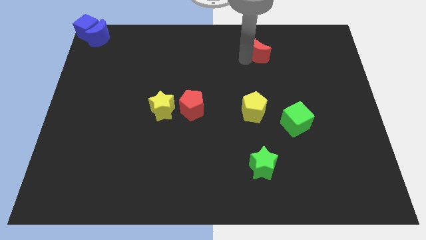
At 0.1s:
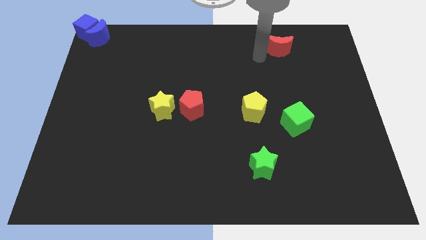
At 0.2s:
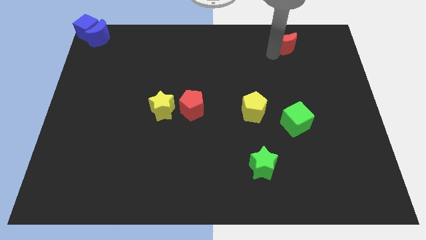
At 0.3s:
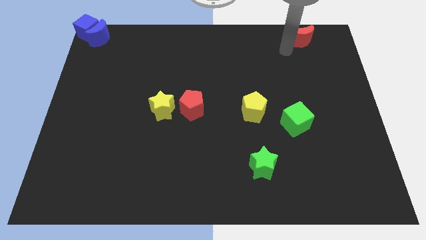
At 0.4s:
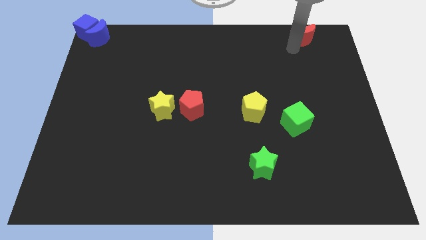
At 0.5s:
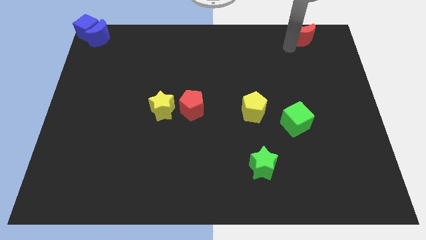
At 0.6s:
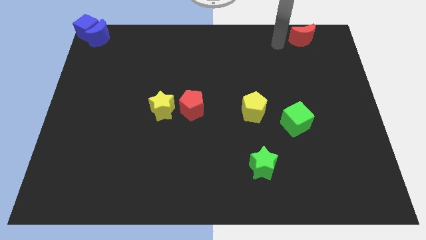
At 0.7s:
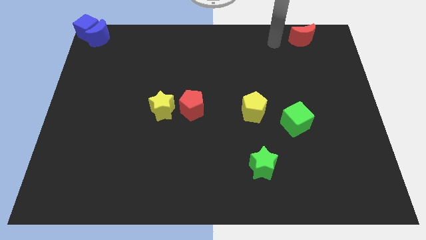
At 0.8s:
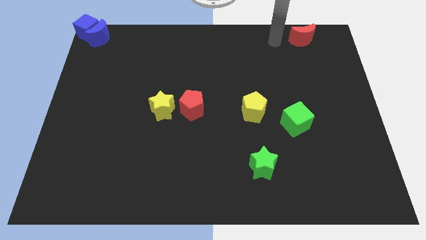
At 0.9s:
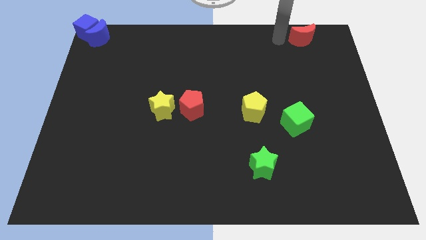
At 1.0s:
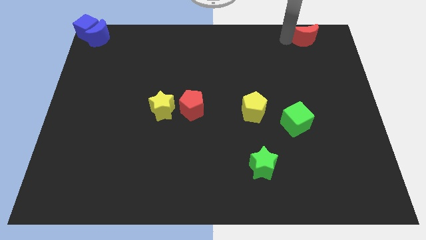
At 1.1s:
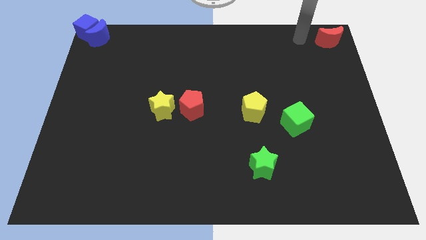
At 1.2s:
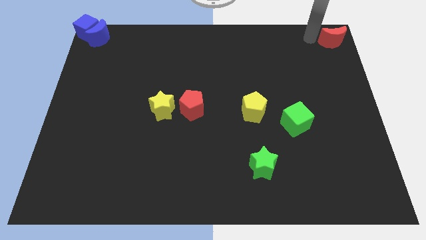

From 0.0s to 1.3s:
arrange the red crescent at the top right of the board

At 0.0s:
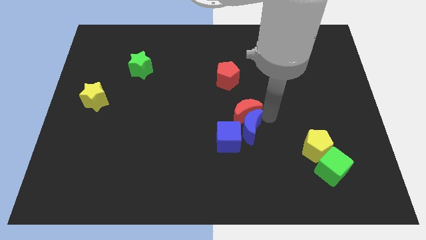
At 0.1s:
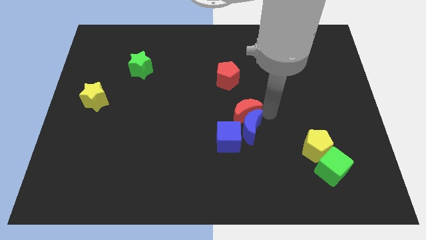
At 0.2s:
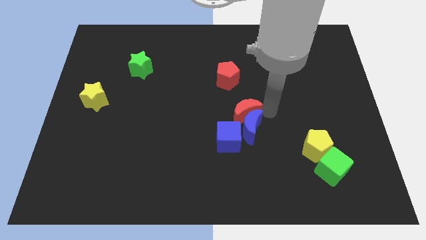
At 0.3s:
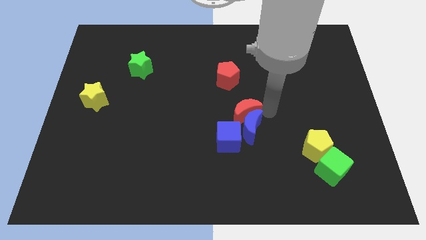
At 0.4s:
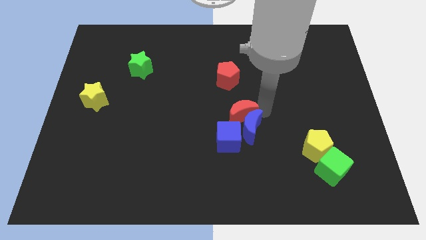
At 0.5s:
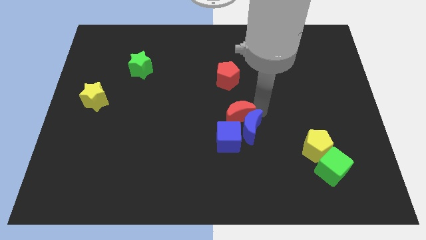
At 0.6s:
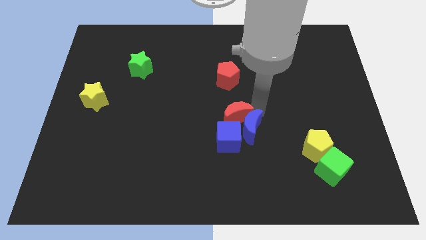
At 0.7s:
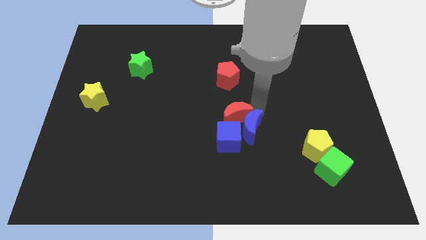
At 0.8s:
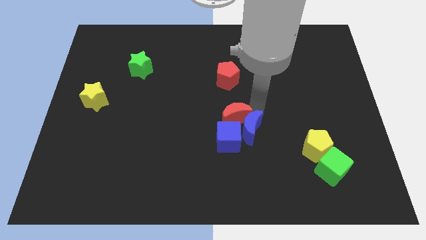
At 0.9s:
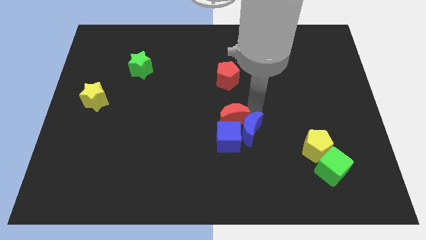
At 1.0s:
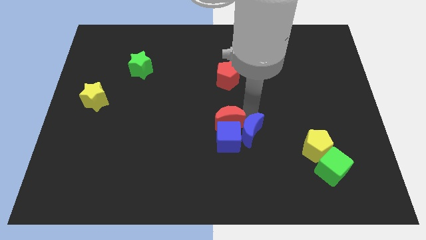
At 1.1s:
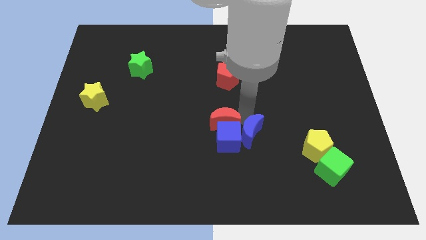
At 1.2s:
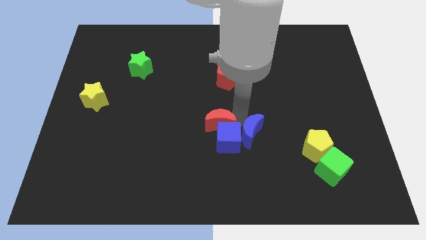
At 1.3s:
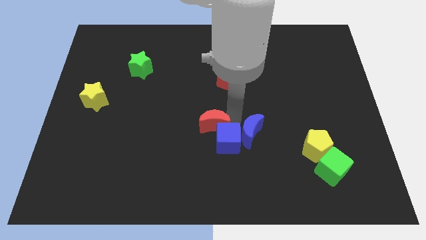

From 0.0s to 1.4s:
place the red crescent above the blue cube

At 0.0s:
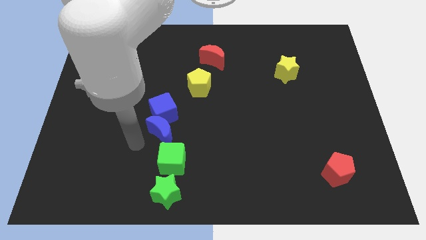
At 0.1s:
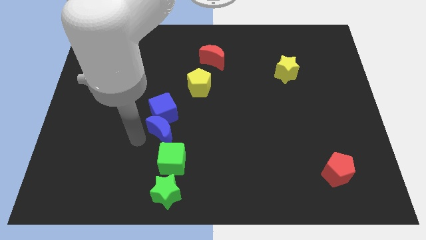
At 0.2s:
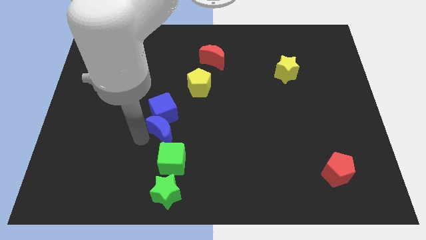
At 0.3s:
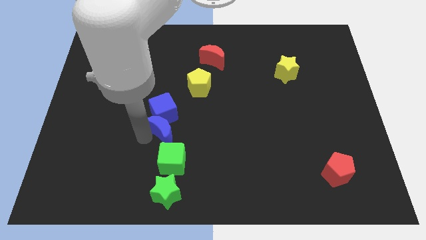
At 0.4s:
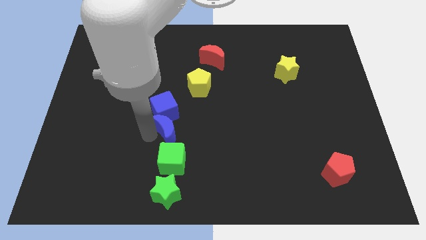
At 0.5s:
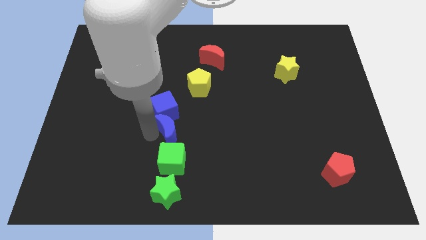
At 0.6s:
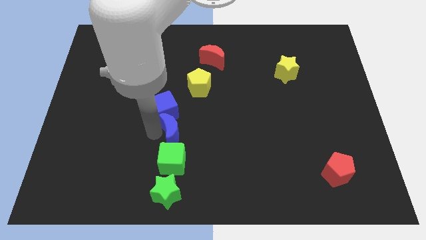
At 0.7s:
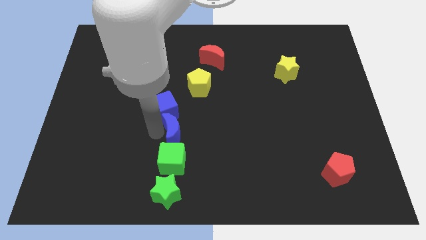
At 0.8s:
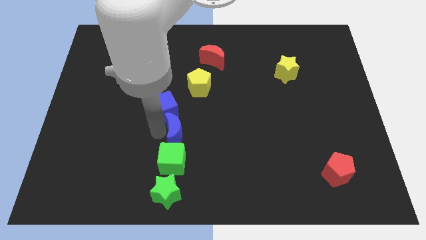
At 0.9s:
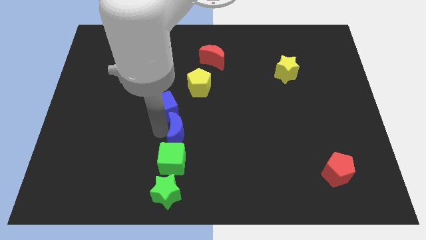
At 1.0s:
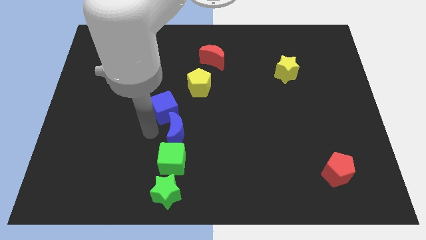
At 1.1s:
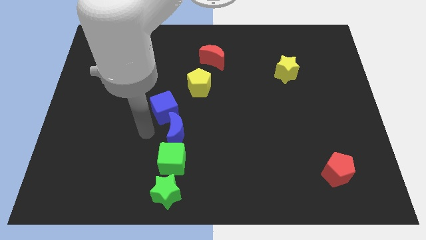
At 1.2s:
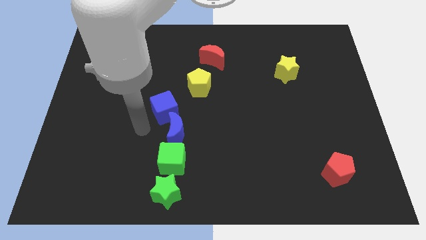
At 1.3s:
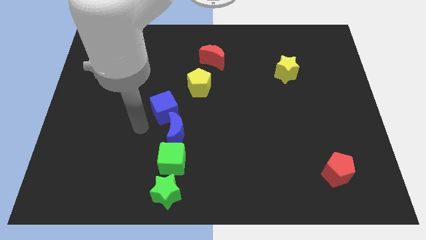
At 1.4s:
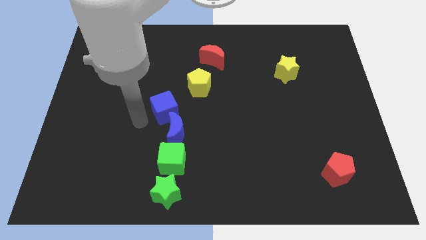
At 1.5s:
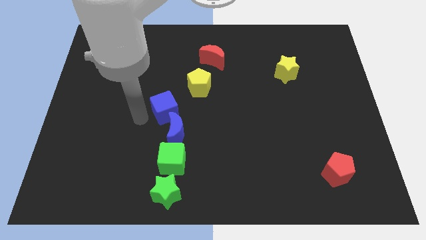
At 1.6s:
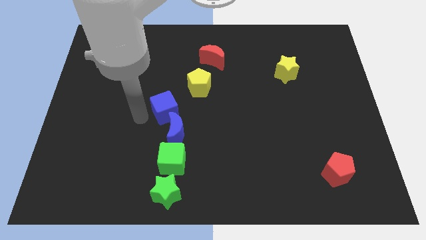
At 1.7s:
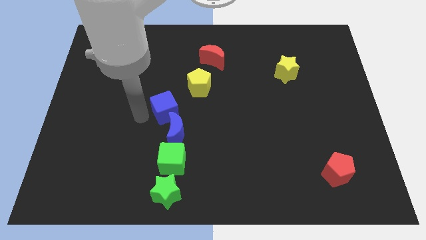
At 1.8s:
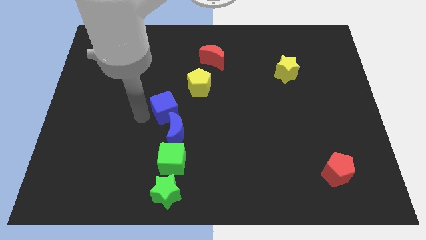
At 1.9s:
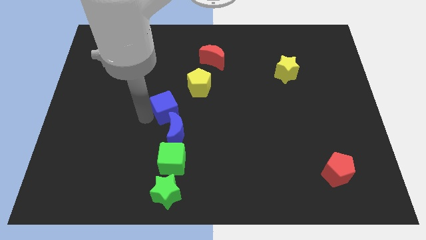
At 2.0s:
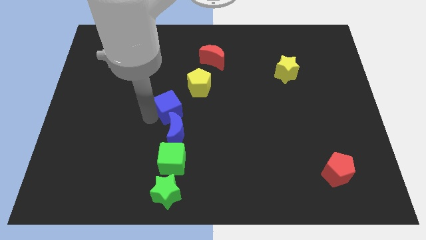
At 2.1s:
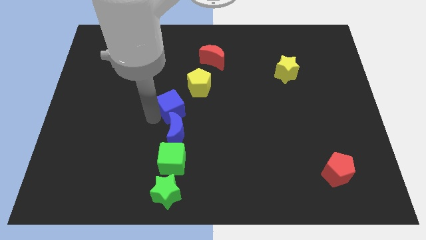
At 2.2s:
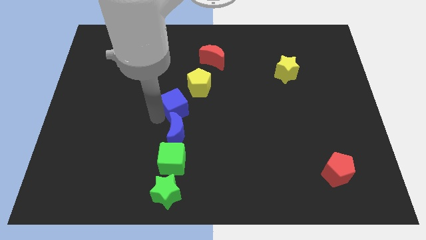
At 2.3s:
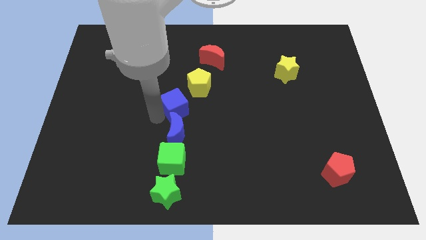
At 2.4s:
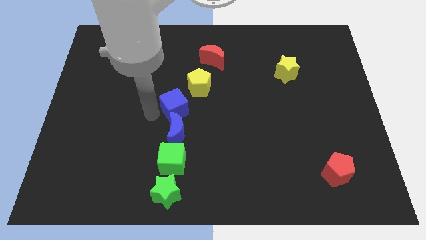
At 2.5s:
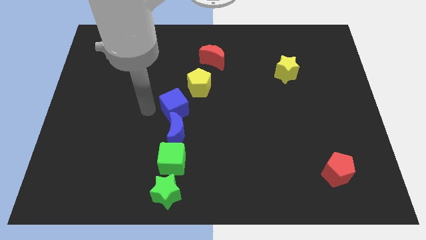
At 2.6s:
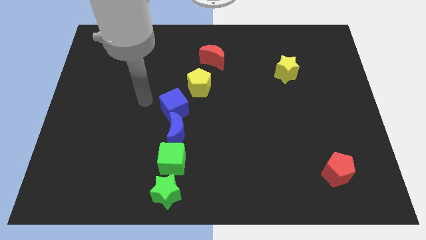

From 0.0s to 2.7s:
slightly push the blue blocks to the right to form a vertical line of blocks

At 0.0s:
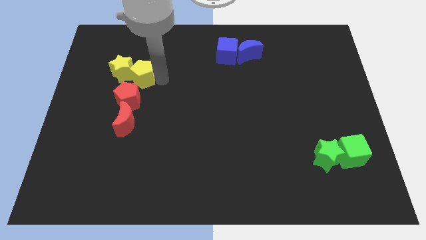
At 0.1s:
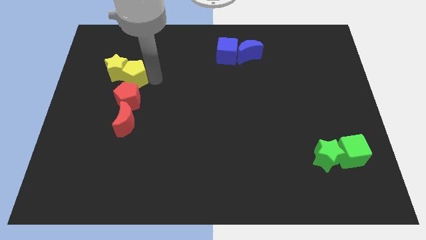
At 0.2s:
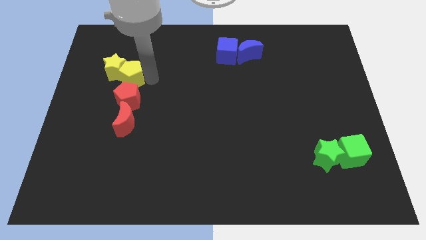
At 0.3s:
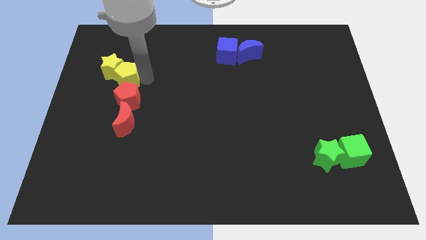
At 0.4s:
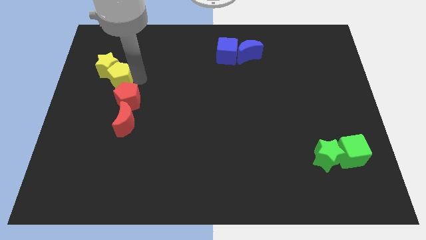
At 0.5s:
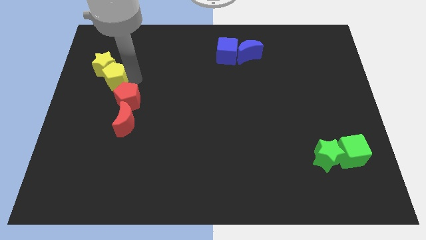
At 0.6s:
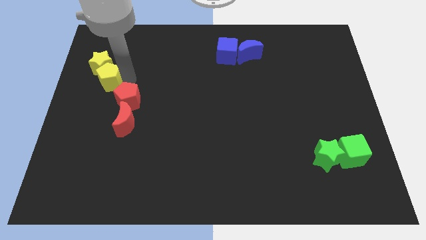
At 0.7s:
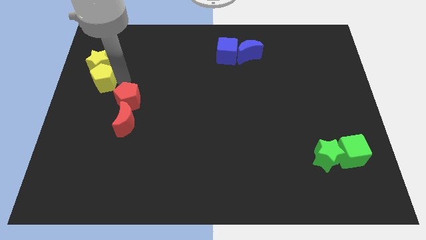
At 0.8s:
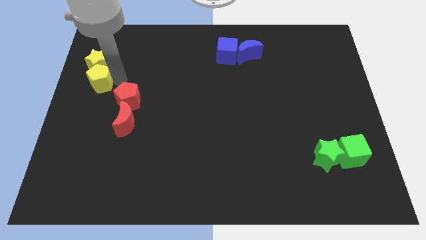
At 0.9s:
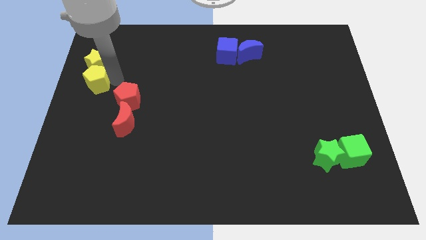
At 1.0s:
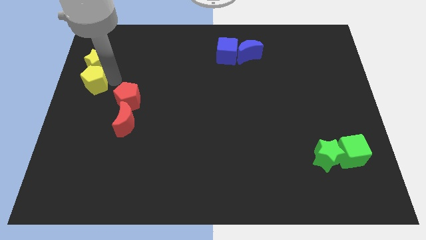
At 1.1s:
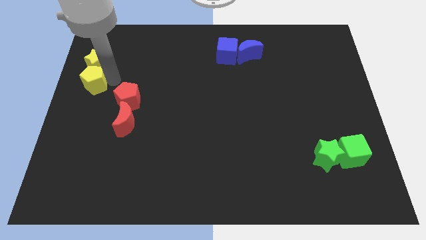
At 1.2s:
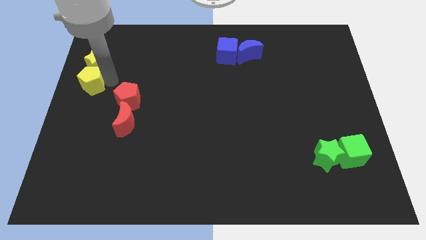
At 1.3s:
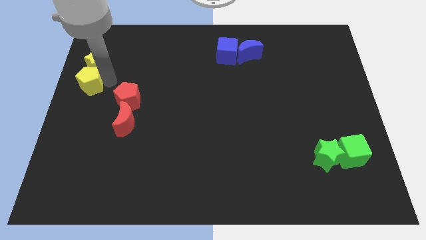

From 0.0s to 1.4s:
move yellow pentagon into the yellow star to the top left

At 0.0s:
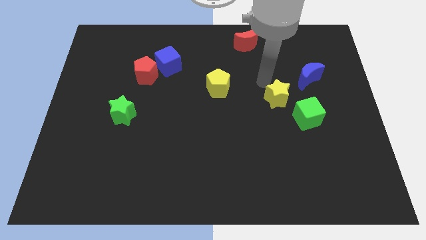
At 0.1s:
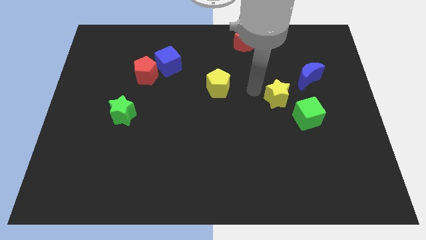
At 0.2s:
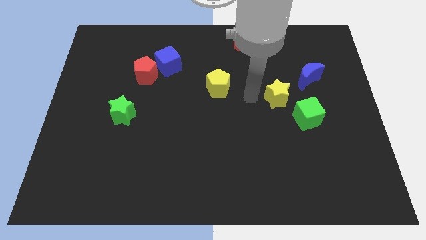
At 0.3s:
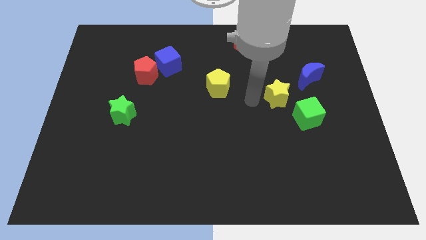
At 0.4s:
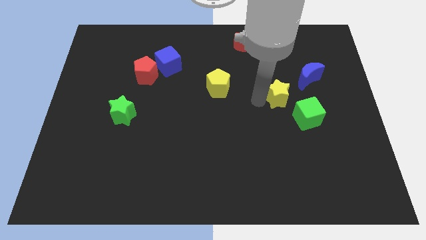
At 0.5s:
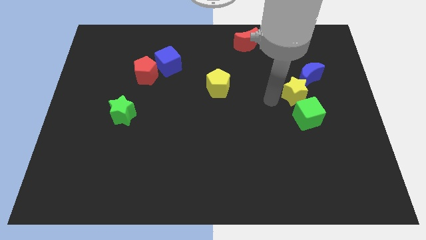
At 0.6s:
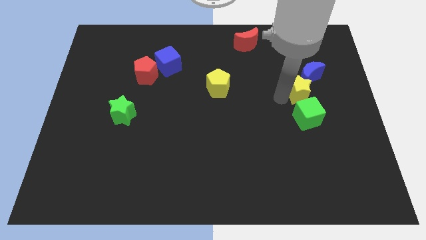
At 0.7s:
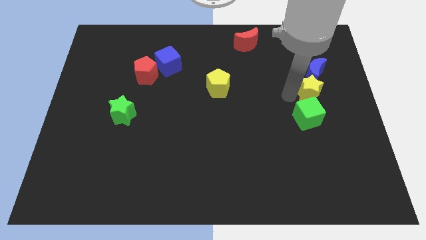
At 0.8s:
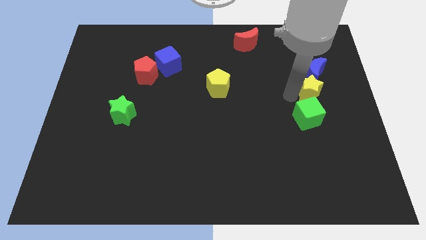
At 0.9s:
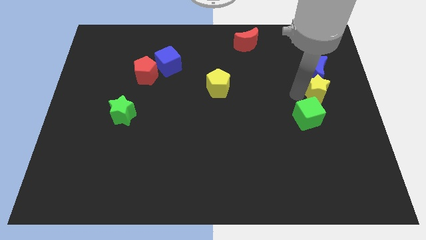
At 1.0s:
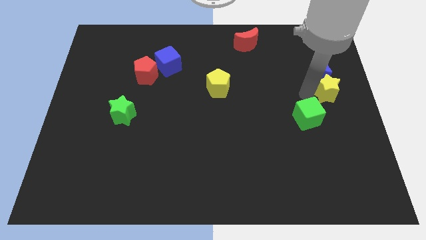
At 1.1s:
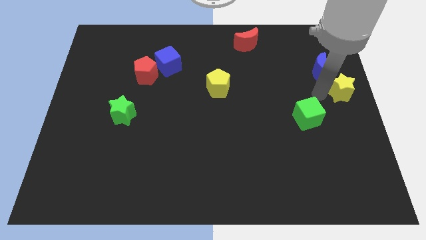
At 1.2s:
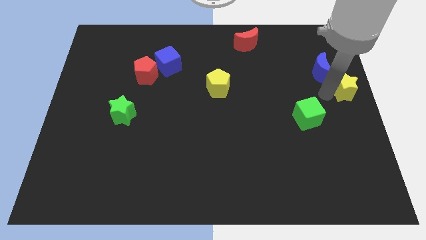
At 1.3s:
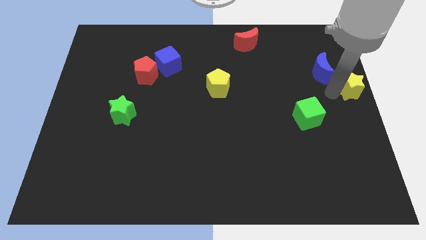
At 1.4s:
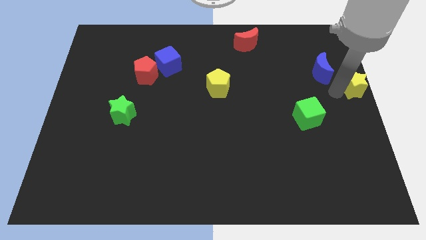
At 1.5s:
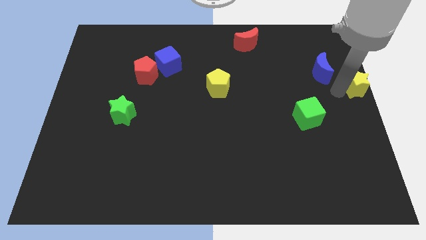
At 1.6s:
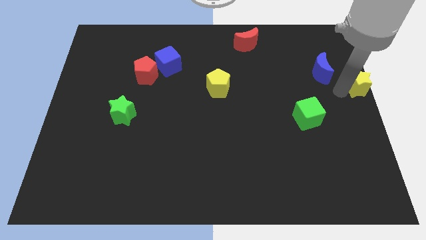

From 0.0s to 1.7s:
move the yellow star towards the center right

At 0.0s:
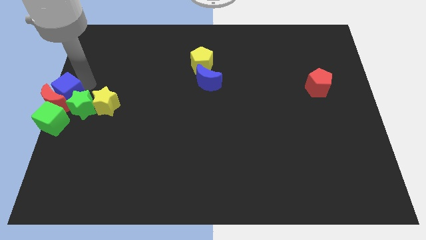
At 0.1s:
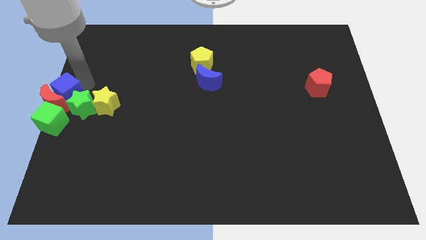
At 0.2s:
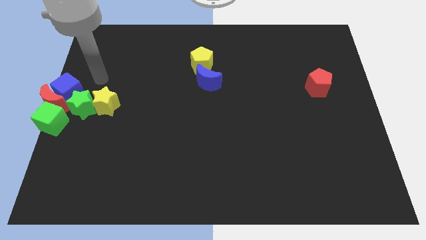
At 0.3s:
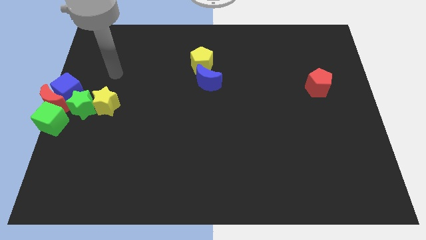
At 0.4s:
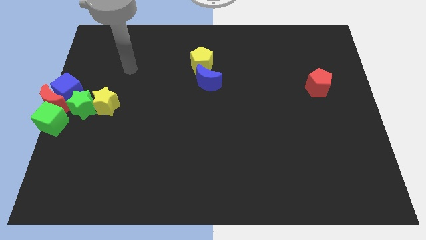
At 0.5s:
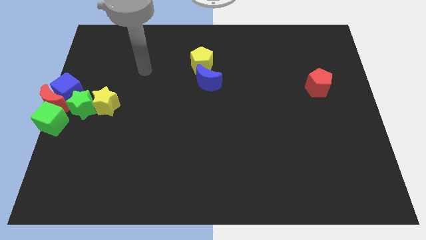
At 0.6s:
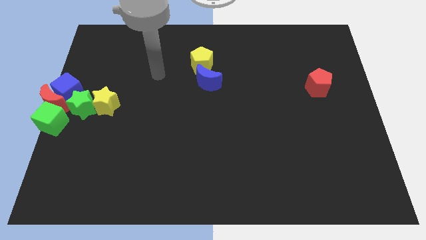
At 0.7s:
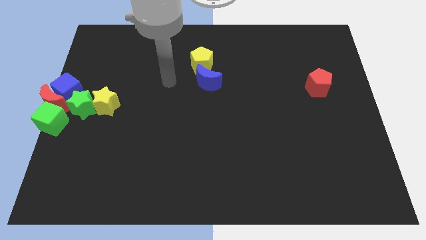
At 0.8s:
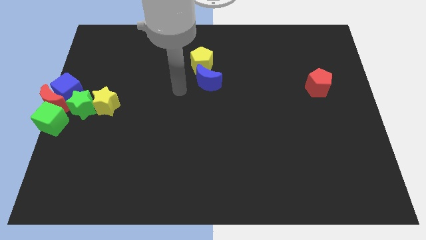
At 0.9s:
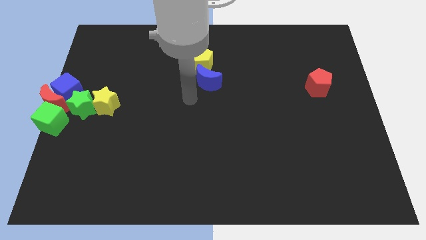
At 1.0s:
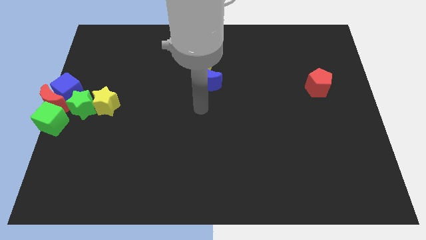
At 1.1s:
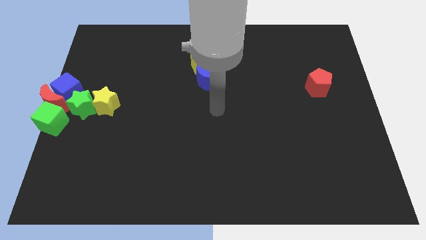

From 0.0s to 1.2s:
move the arm away from the blue cube
